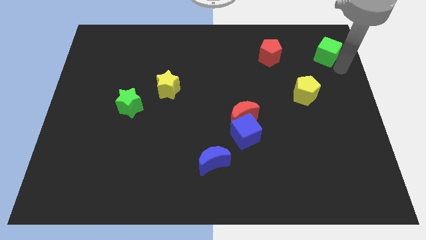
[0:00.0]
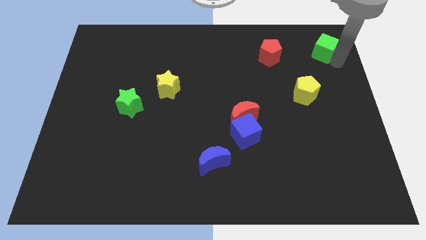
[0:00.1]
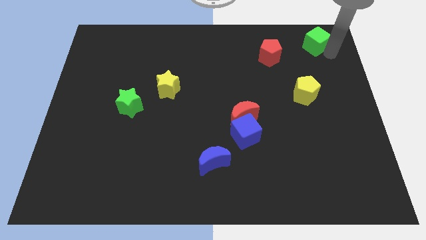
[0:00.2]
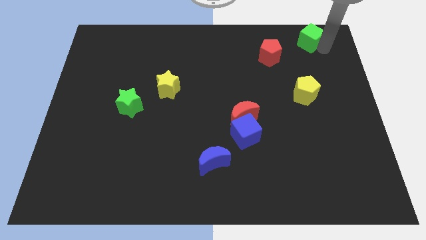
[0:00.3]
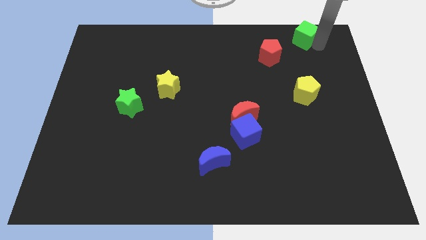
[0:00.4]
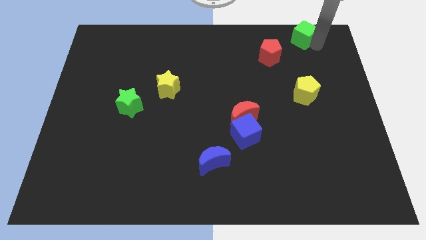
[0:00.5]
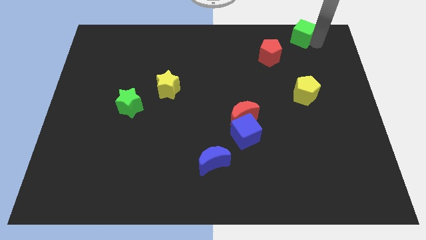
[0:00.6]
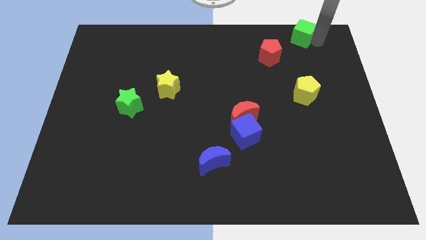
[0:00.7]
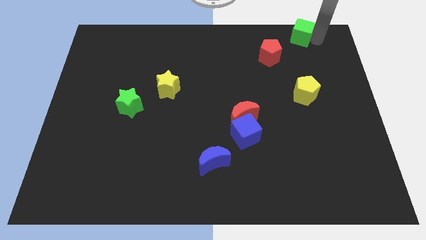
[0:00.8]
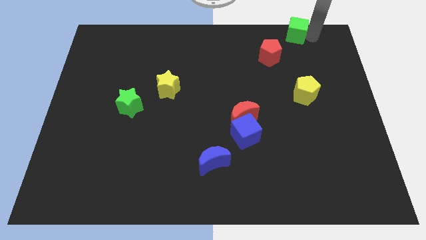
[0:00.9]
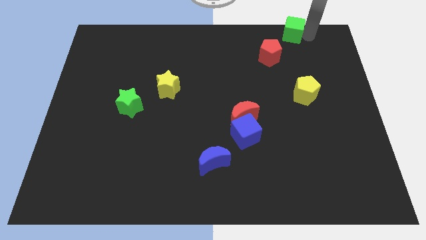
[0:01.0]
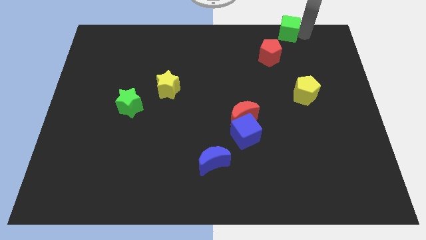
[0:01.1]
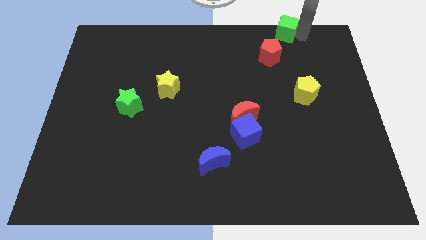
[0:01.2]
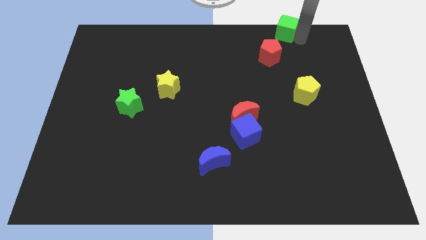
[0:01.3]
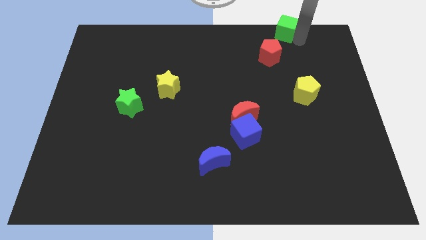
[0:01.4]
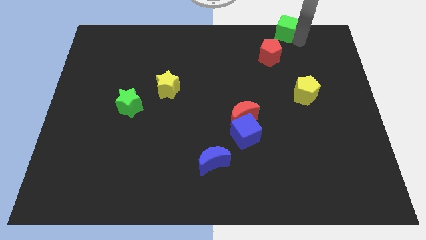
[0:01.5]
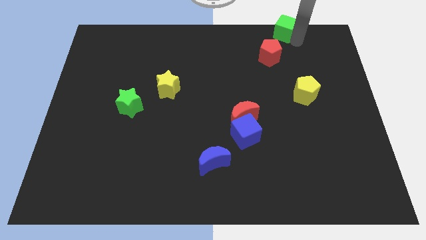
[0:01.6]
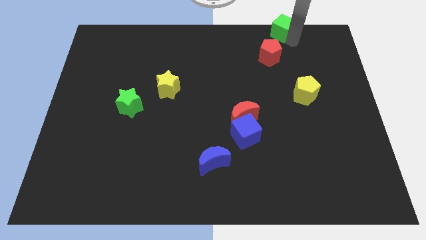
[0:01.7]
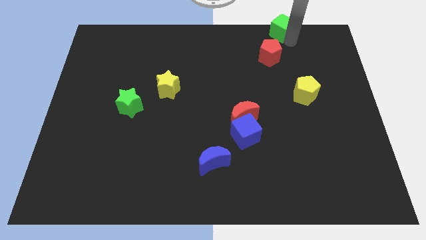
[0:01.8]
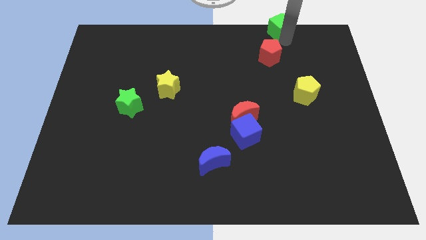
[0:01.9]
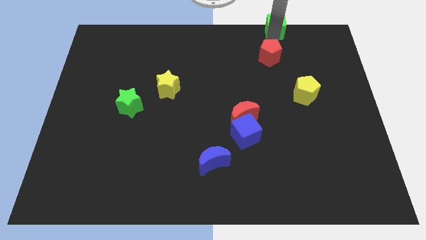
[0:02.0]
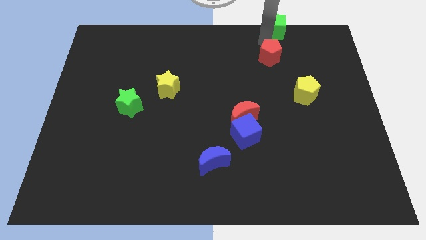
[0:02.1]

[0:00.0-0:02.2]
place the green cube above the red pentagon

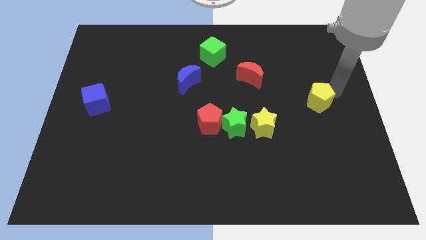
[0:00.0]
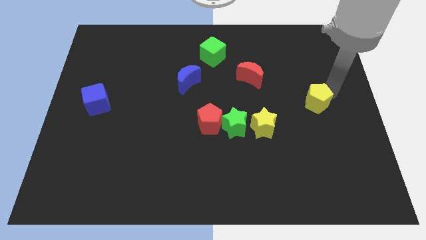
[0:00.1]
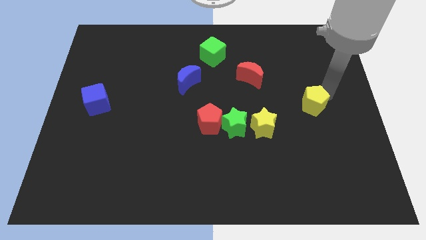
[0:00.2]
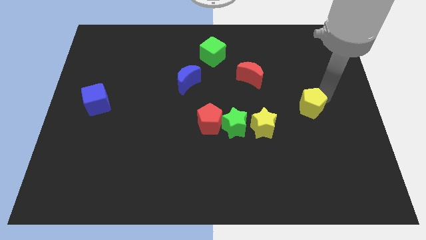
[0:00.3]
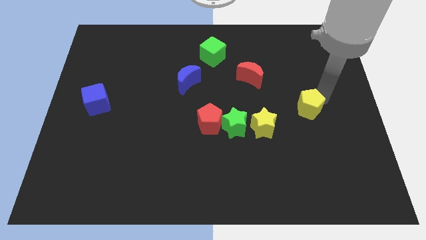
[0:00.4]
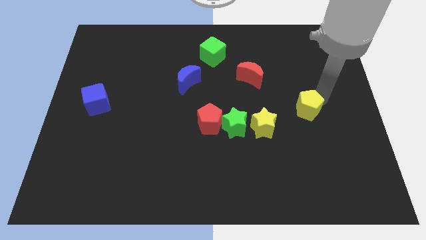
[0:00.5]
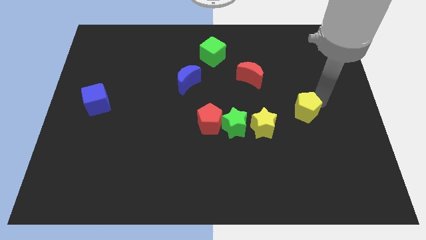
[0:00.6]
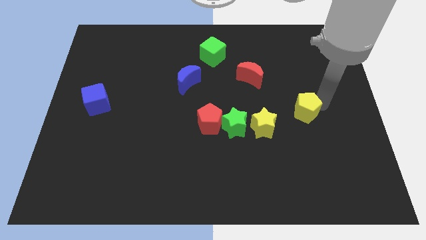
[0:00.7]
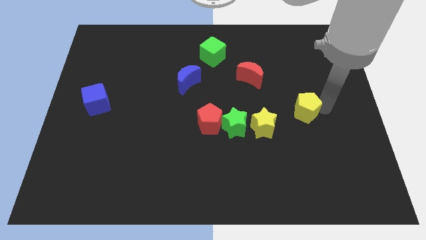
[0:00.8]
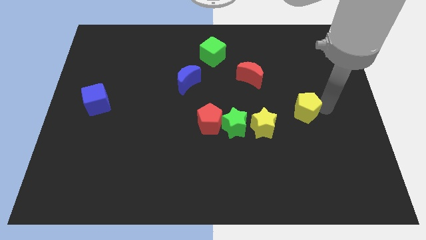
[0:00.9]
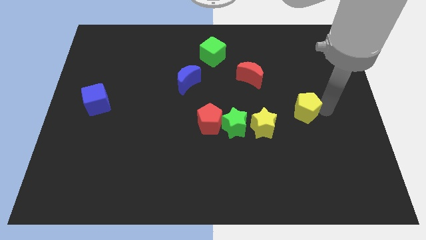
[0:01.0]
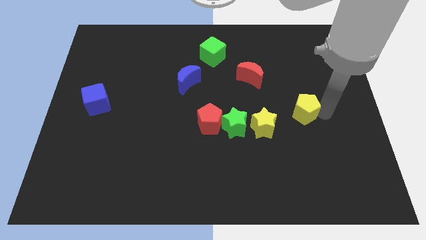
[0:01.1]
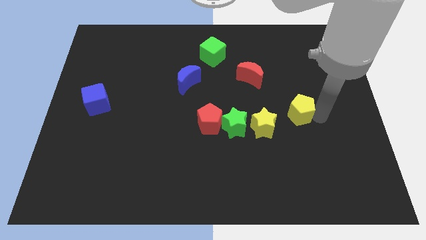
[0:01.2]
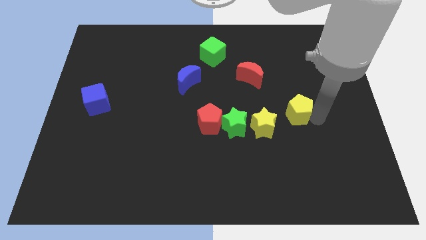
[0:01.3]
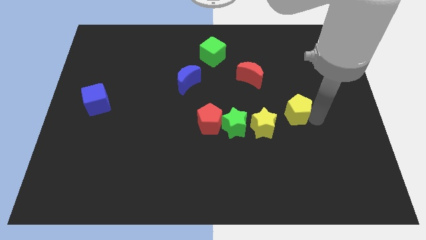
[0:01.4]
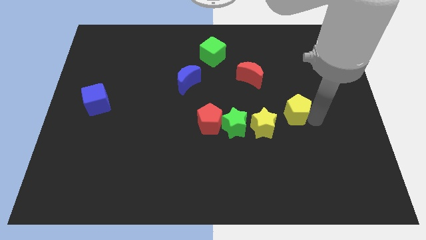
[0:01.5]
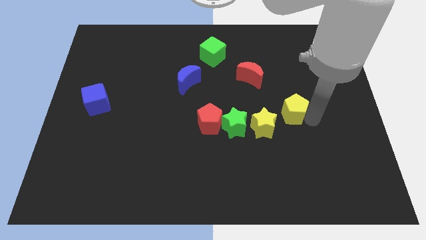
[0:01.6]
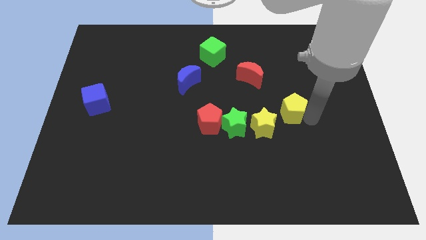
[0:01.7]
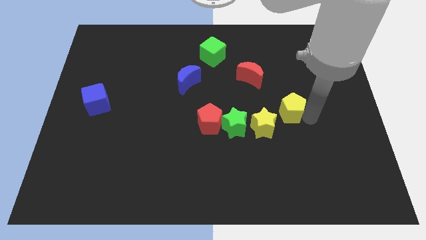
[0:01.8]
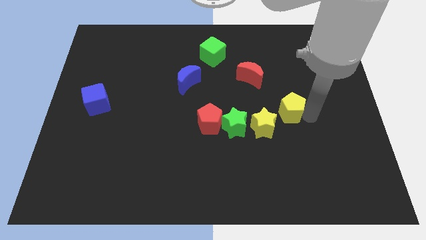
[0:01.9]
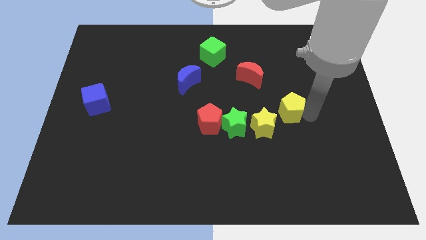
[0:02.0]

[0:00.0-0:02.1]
put the yellow pentagon at the top right of the yellow star

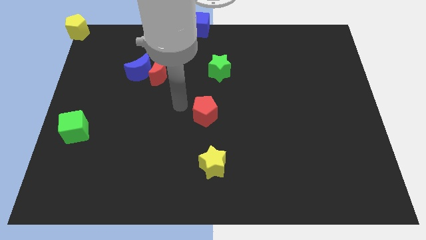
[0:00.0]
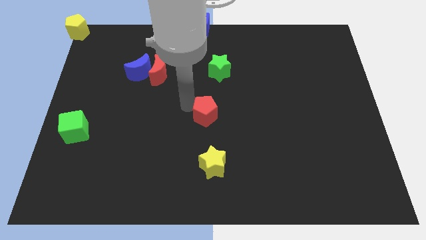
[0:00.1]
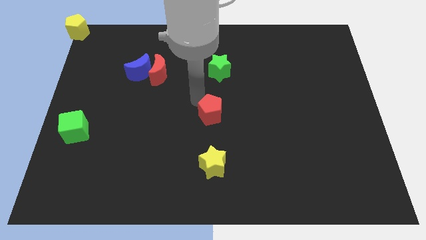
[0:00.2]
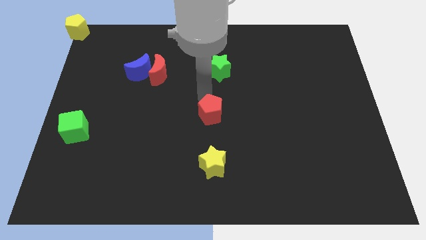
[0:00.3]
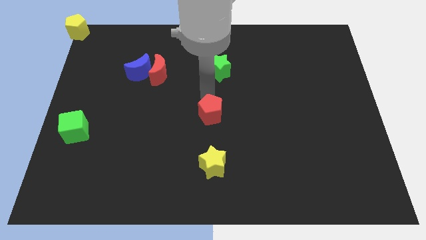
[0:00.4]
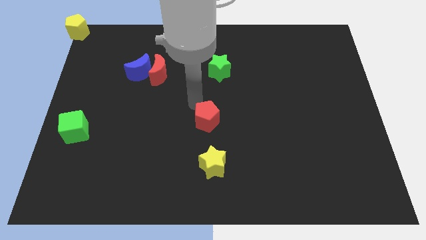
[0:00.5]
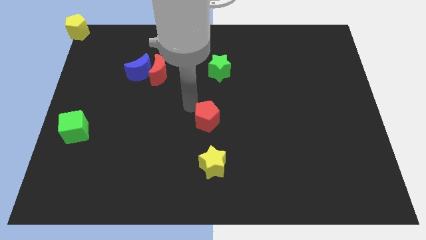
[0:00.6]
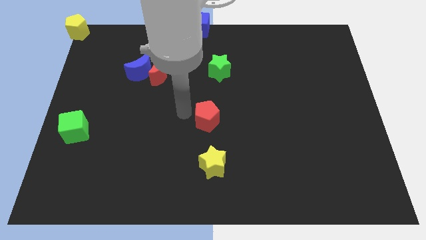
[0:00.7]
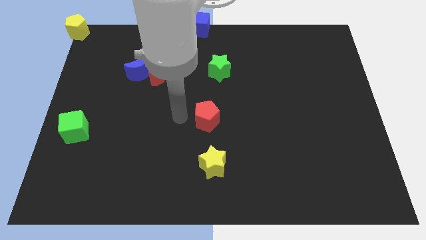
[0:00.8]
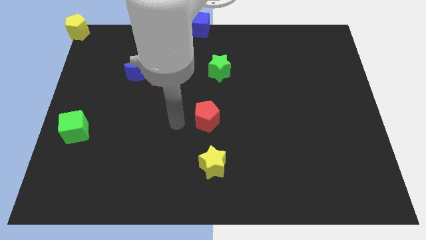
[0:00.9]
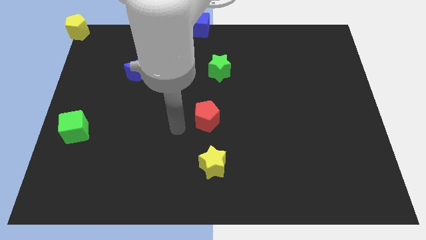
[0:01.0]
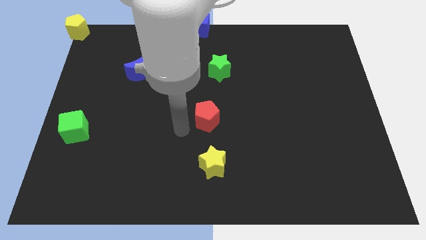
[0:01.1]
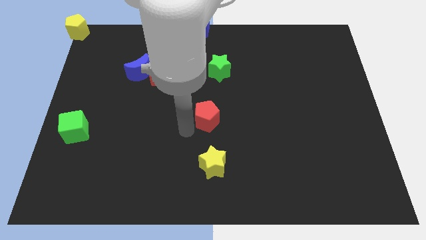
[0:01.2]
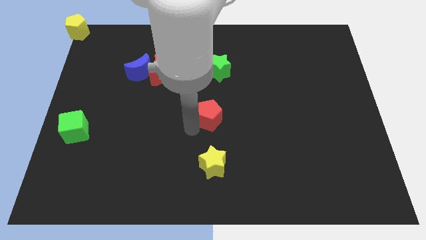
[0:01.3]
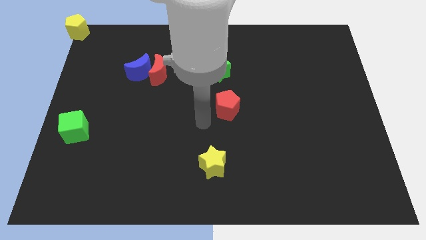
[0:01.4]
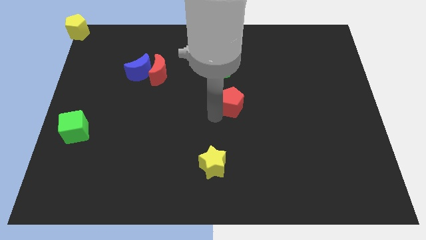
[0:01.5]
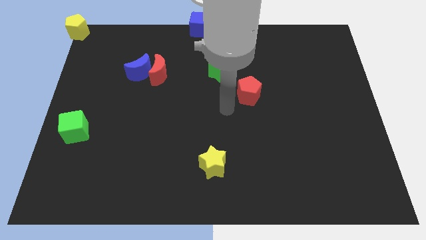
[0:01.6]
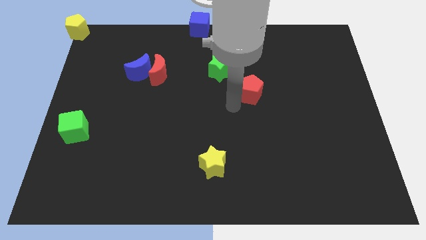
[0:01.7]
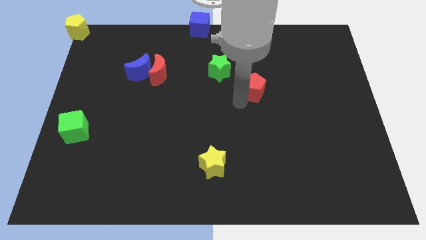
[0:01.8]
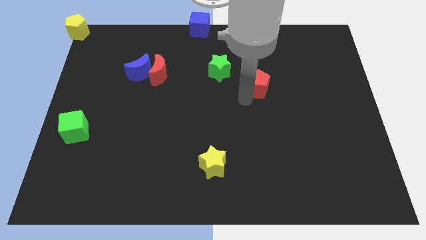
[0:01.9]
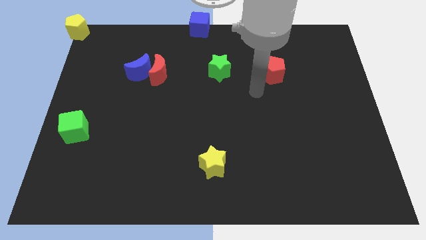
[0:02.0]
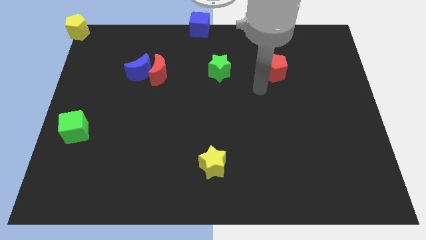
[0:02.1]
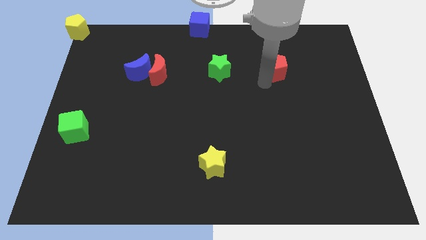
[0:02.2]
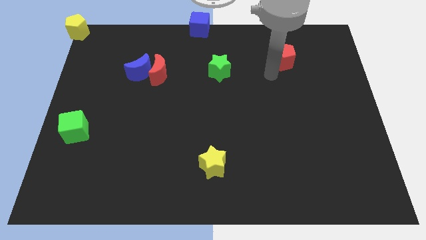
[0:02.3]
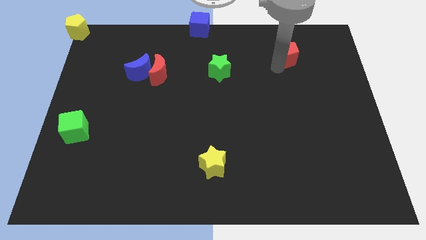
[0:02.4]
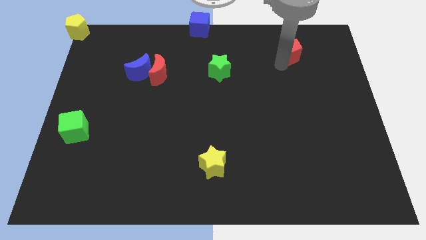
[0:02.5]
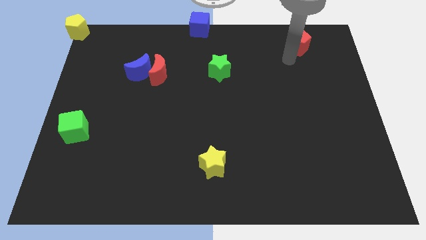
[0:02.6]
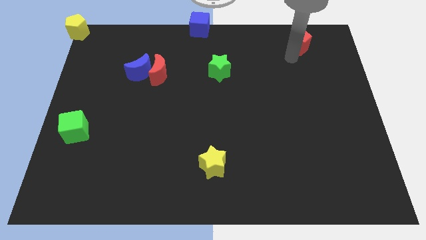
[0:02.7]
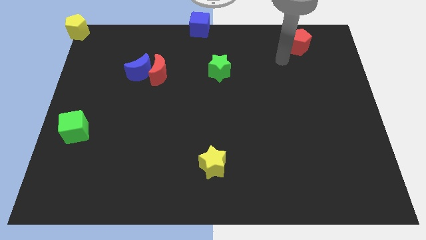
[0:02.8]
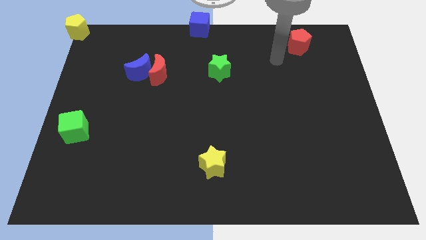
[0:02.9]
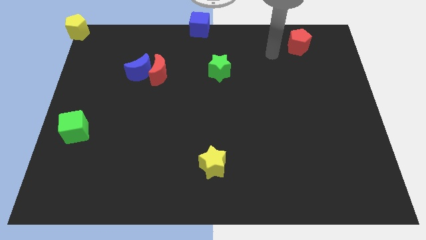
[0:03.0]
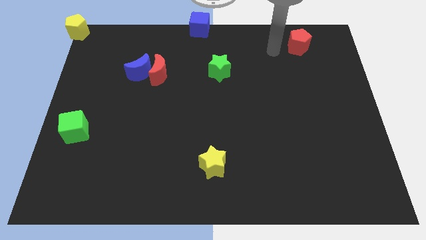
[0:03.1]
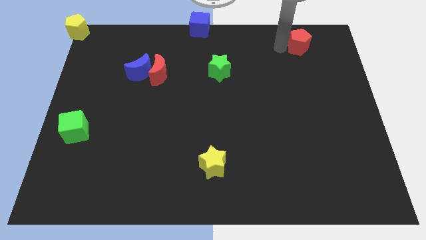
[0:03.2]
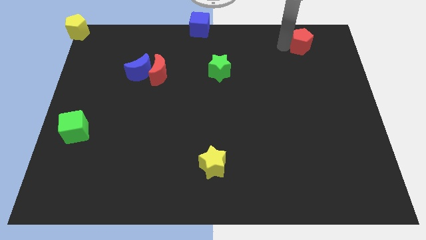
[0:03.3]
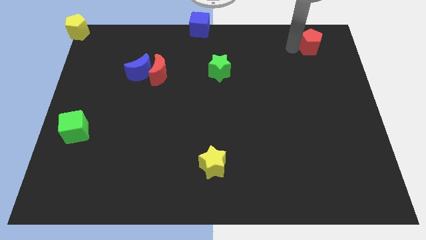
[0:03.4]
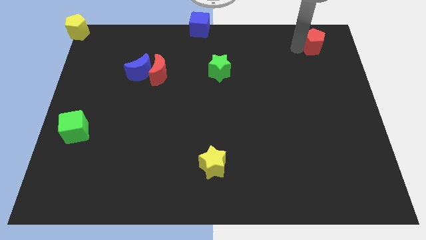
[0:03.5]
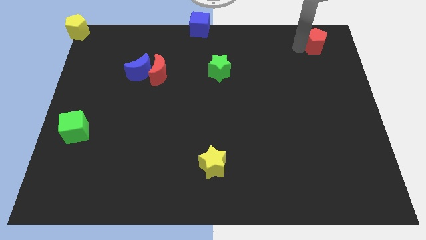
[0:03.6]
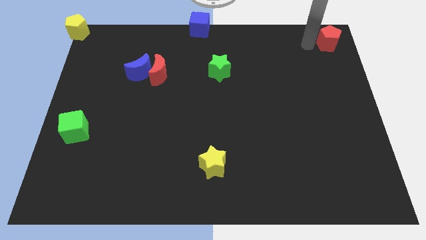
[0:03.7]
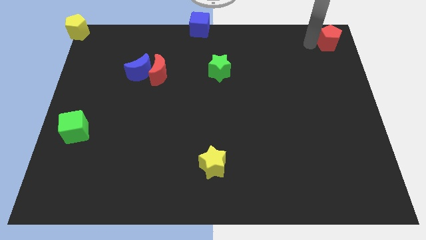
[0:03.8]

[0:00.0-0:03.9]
push the red pentagon to the top right corner of the board

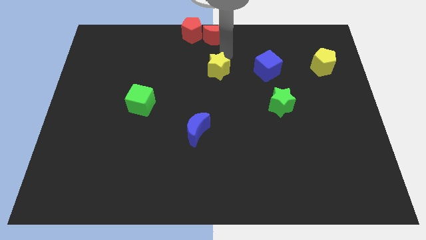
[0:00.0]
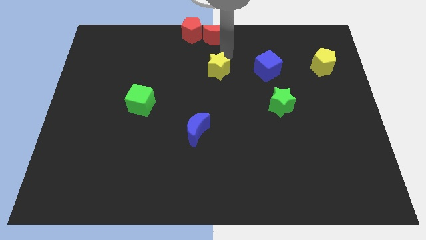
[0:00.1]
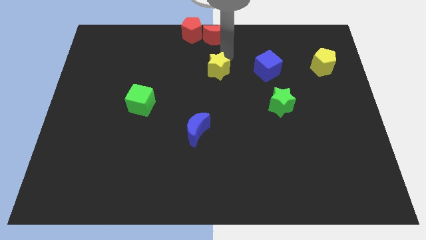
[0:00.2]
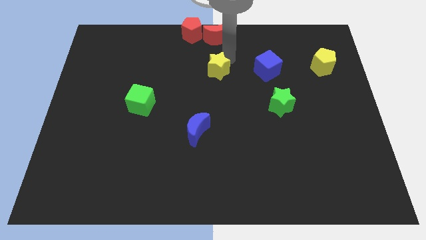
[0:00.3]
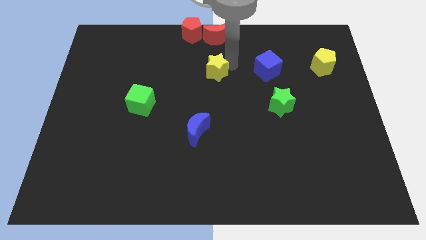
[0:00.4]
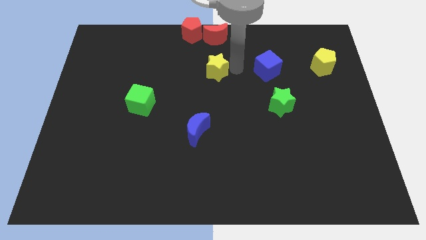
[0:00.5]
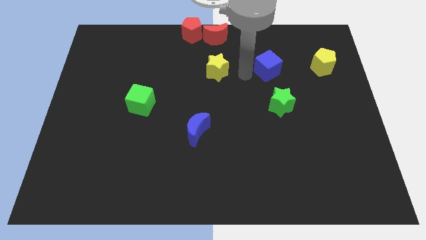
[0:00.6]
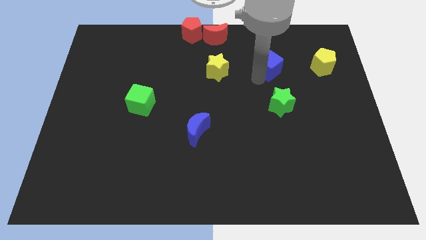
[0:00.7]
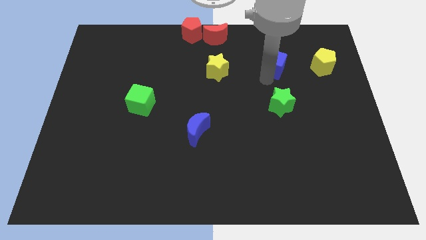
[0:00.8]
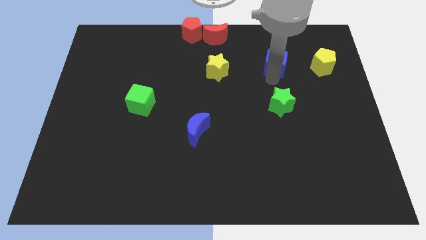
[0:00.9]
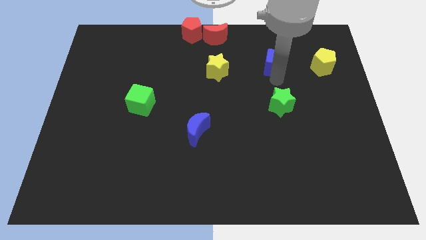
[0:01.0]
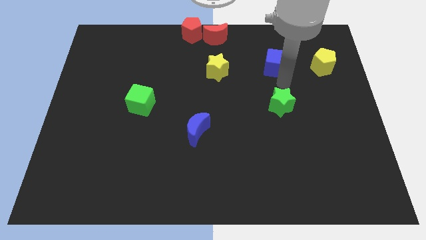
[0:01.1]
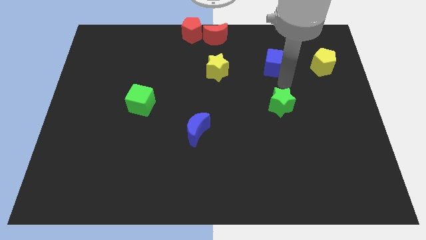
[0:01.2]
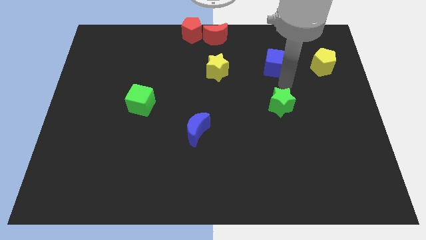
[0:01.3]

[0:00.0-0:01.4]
slightly push the blue cube towards the yellow pentagon
